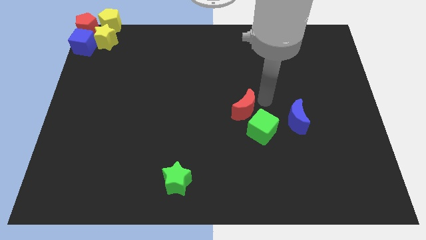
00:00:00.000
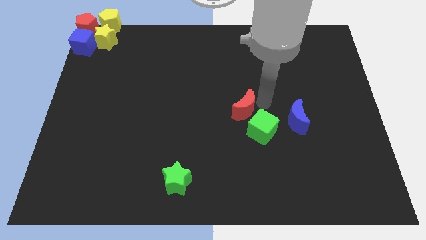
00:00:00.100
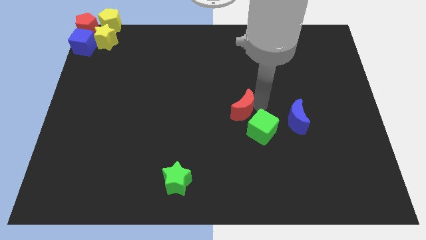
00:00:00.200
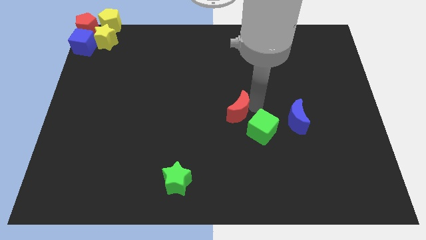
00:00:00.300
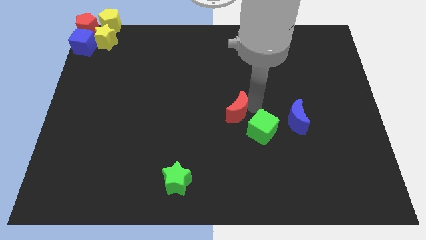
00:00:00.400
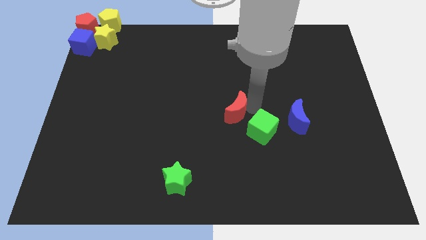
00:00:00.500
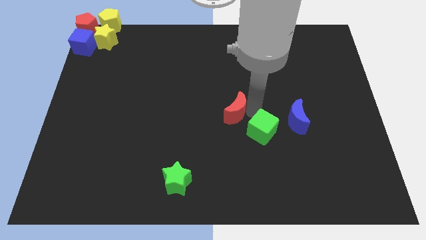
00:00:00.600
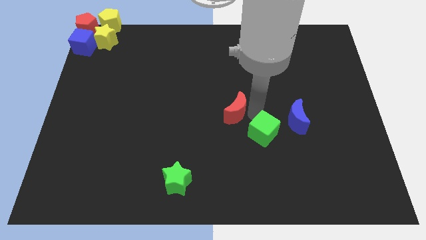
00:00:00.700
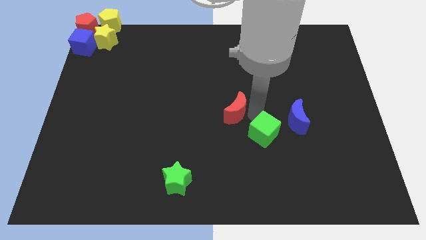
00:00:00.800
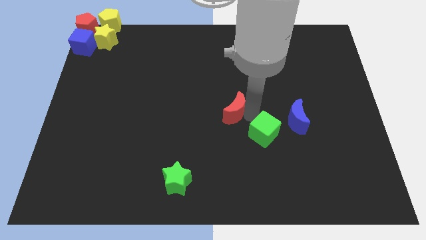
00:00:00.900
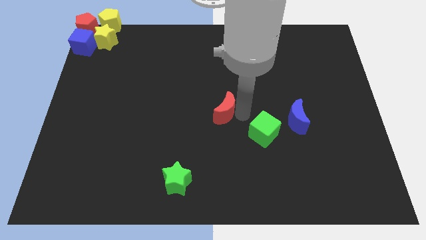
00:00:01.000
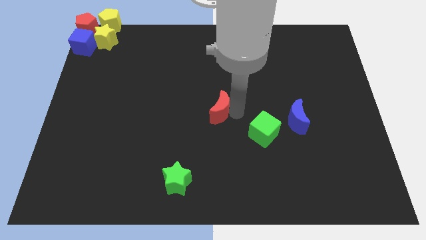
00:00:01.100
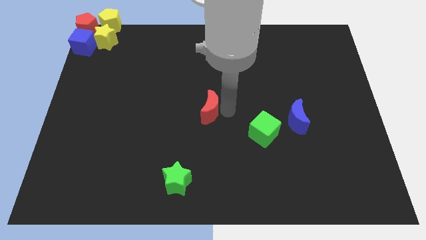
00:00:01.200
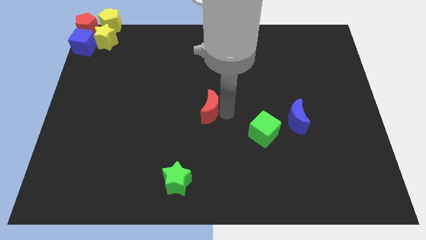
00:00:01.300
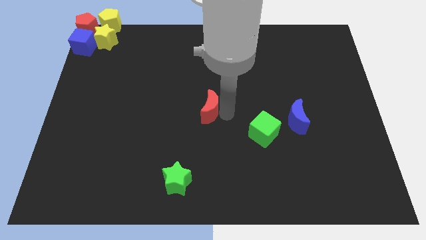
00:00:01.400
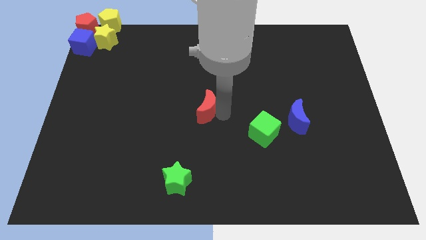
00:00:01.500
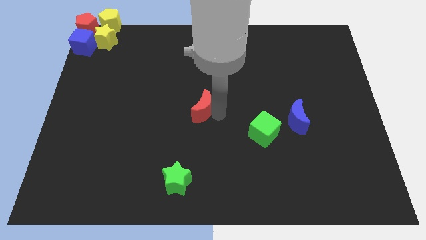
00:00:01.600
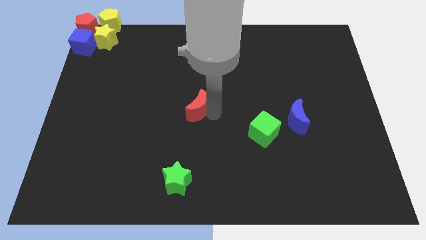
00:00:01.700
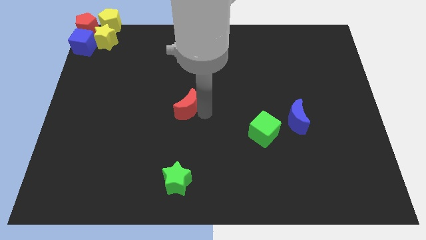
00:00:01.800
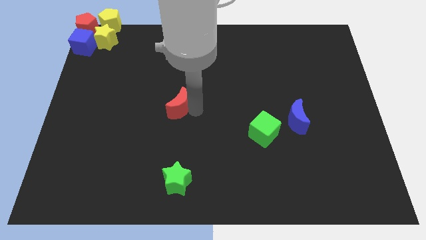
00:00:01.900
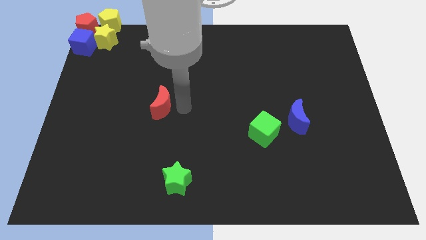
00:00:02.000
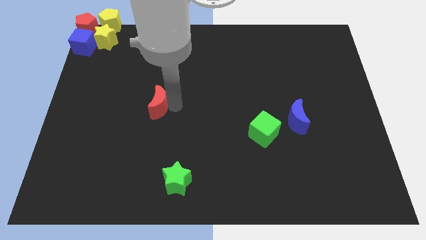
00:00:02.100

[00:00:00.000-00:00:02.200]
place the red moon above the green star

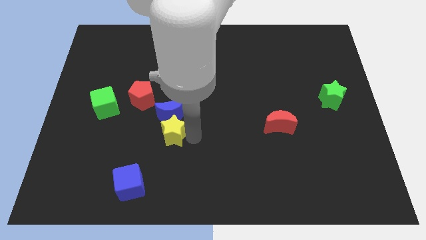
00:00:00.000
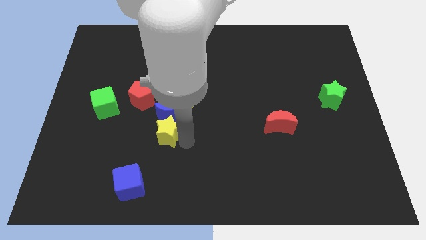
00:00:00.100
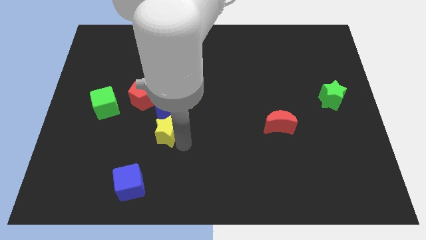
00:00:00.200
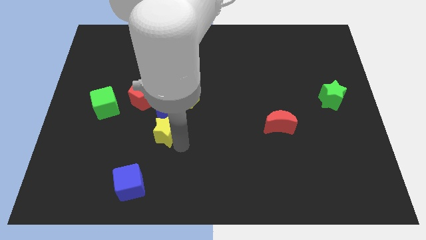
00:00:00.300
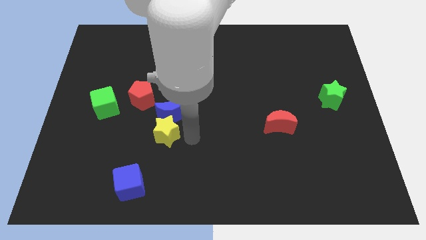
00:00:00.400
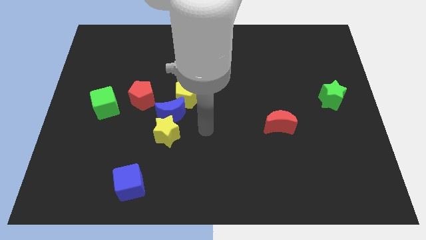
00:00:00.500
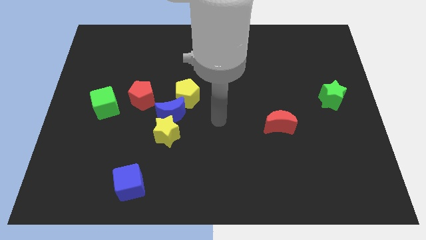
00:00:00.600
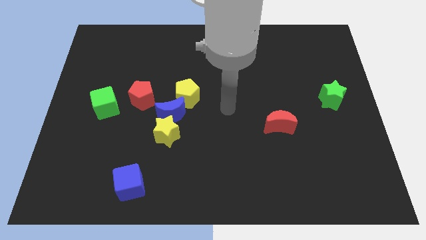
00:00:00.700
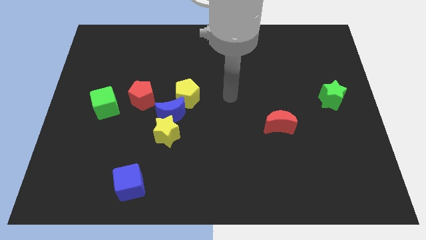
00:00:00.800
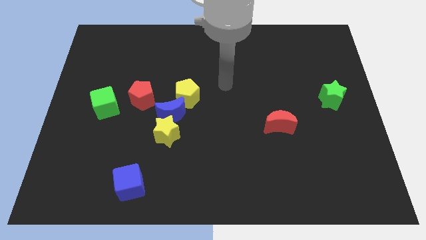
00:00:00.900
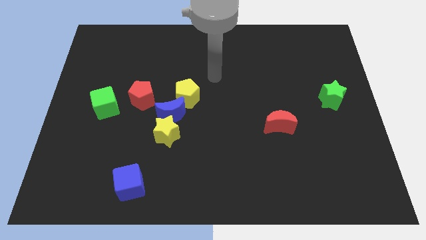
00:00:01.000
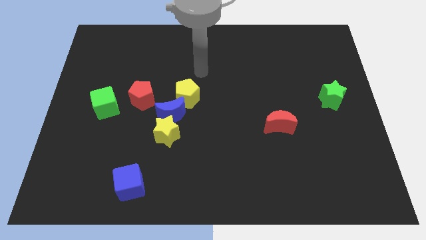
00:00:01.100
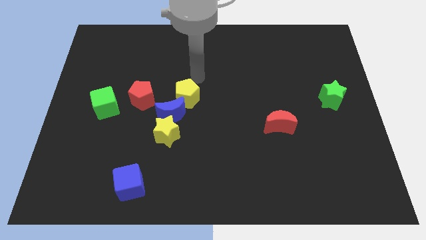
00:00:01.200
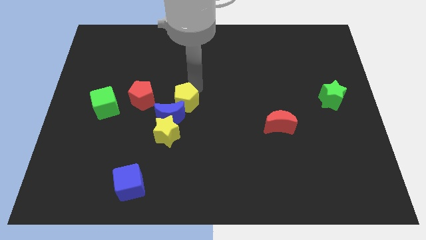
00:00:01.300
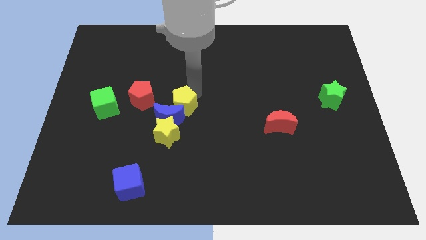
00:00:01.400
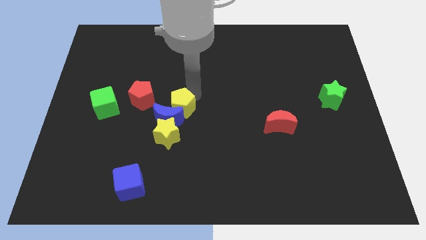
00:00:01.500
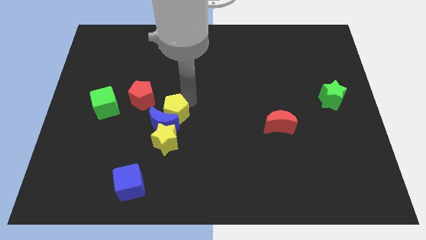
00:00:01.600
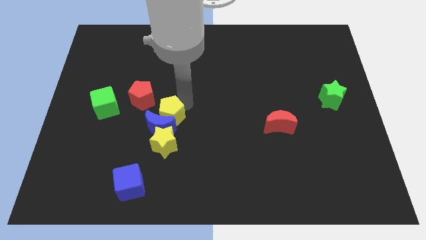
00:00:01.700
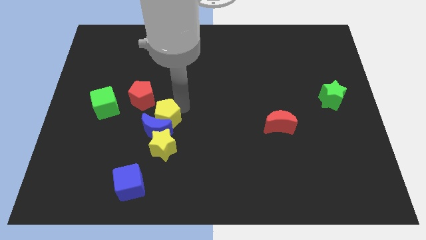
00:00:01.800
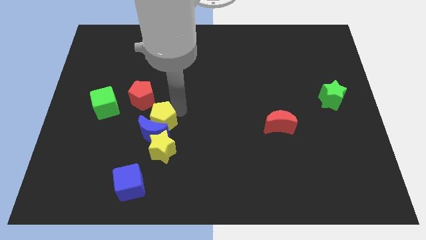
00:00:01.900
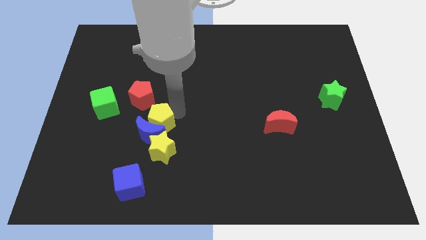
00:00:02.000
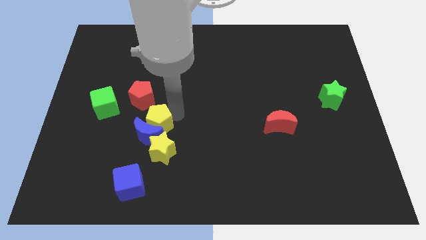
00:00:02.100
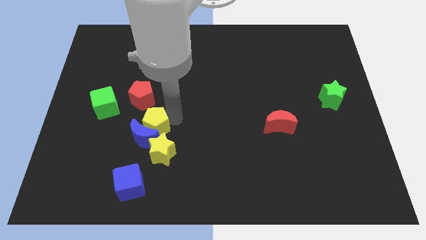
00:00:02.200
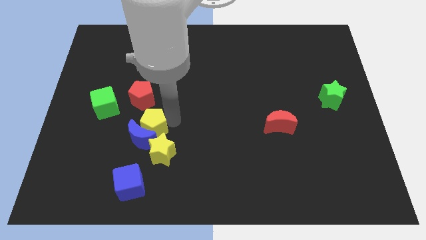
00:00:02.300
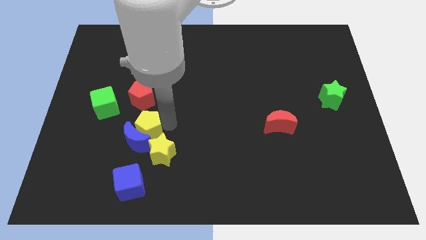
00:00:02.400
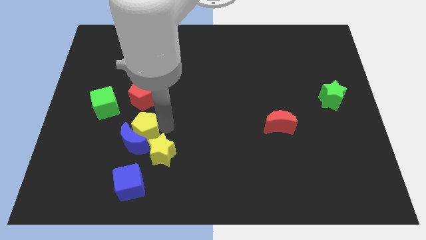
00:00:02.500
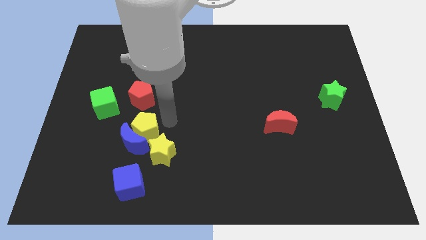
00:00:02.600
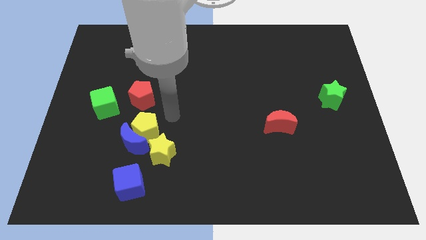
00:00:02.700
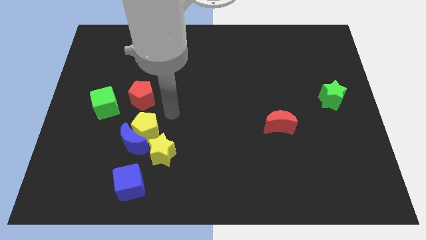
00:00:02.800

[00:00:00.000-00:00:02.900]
push the yellow pentagon and blue moon towards the left

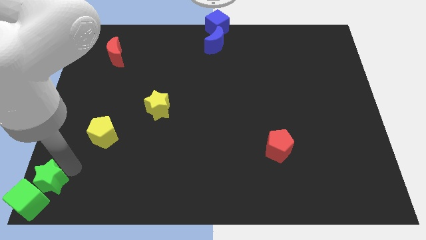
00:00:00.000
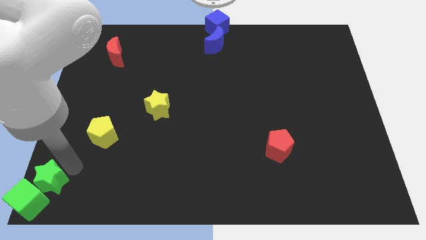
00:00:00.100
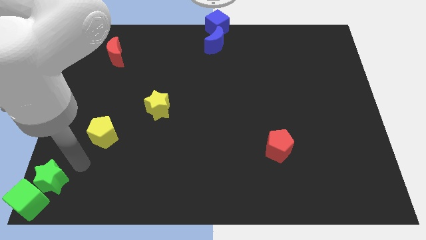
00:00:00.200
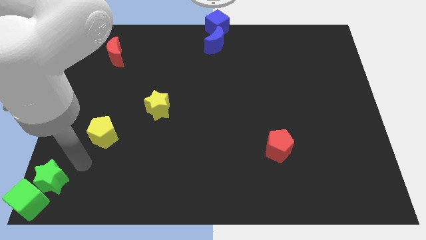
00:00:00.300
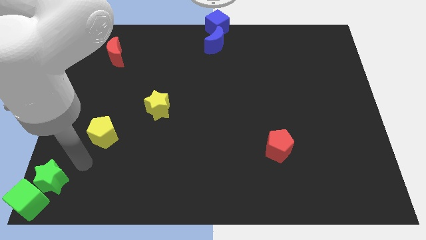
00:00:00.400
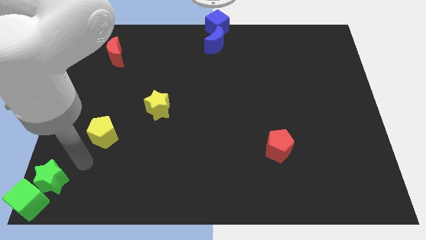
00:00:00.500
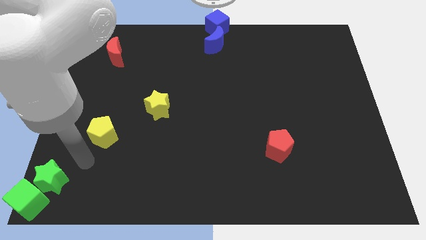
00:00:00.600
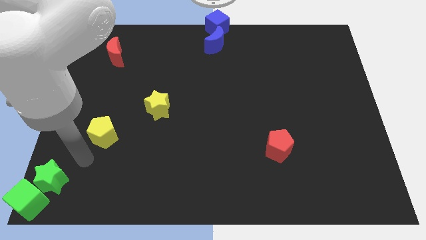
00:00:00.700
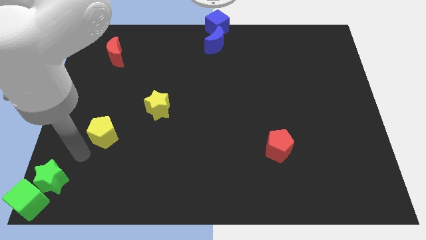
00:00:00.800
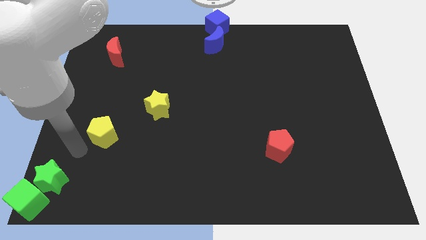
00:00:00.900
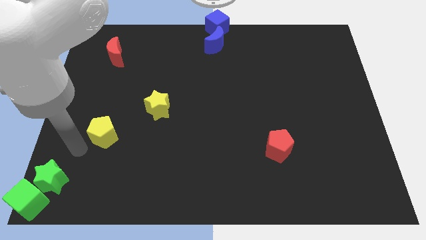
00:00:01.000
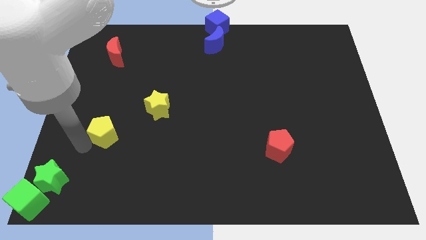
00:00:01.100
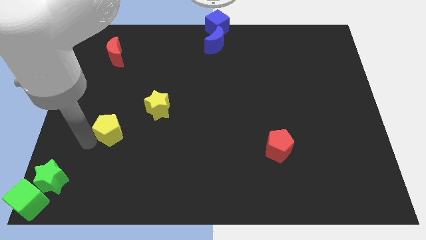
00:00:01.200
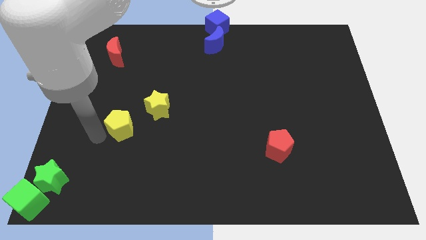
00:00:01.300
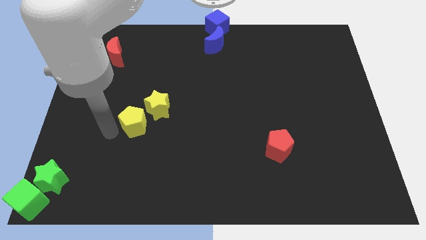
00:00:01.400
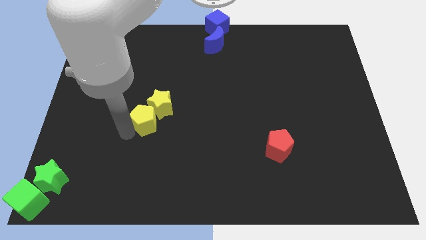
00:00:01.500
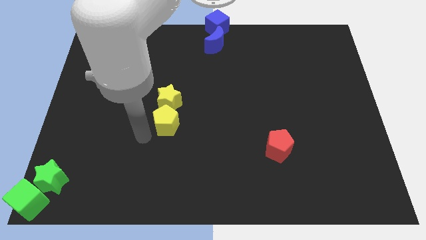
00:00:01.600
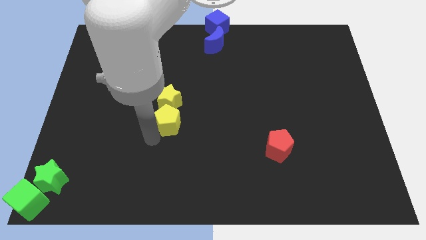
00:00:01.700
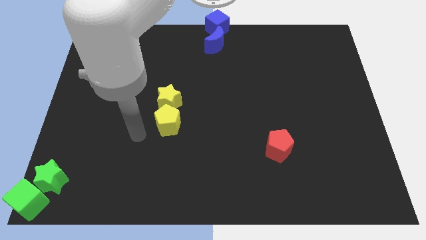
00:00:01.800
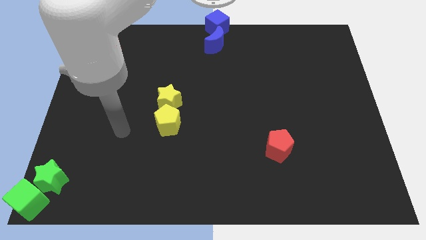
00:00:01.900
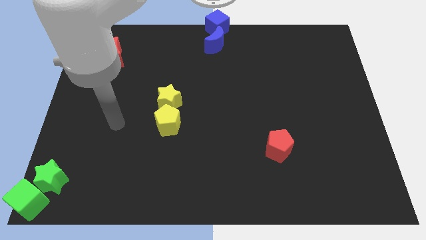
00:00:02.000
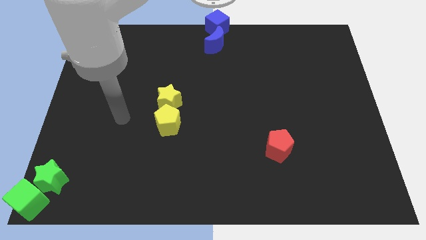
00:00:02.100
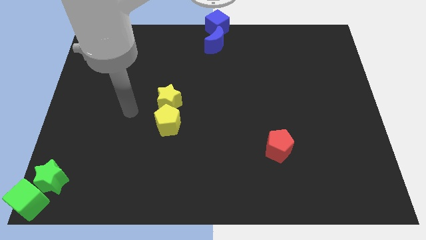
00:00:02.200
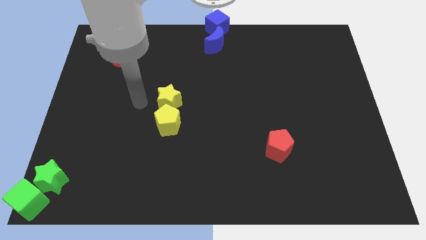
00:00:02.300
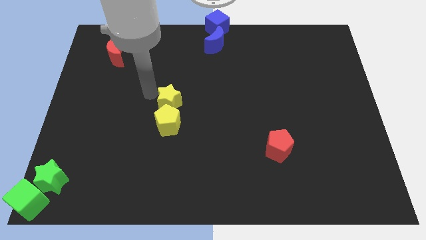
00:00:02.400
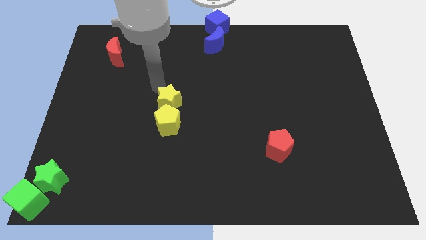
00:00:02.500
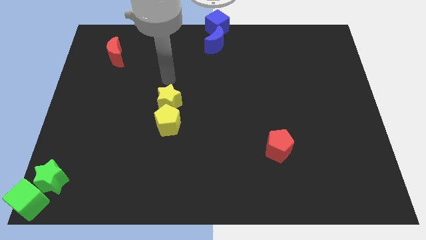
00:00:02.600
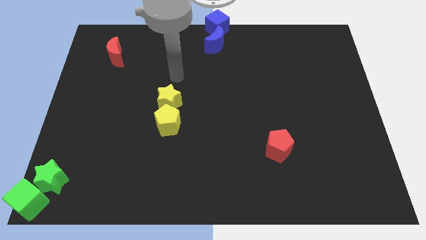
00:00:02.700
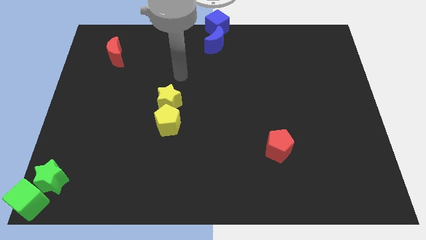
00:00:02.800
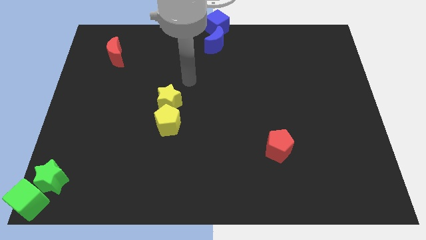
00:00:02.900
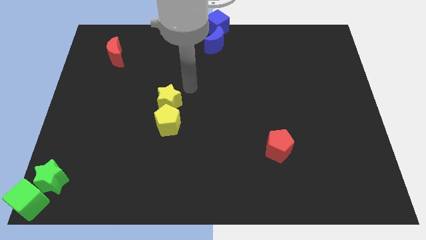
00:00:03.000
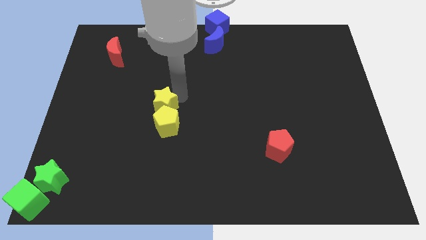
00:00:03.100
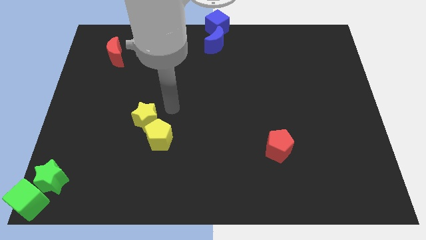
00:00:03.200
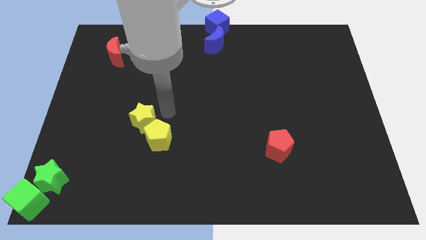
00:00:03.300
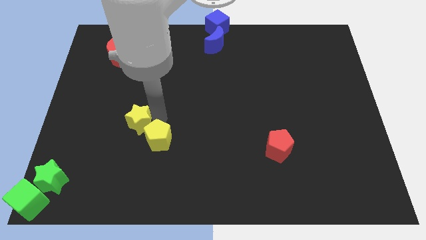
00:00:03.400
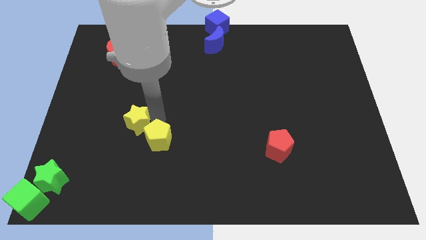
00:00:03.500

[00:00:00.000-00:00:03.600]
move the yellow pentagon into the yellow star

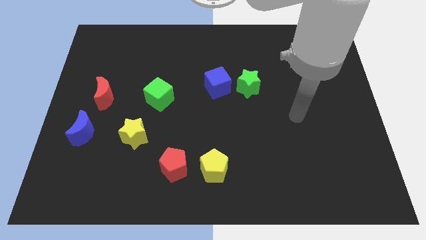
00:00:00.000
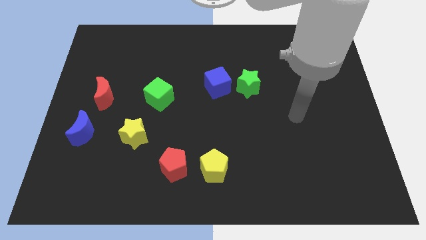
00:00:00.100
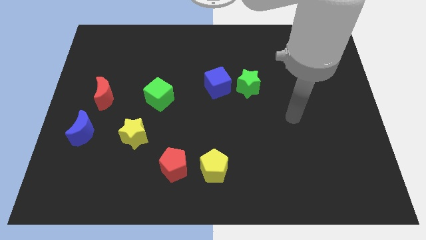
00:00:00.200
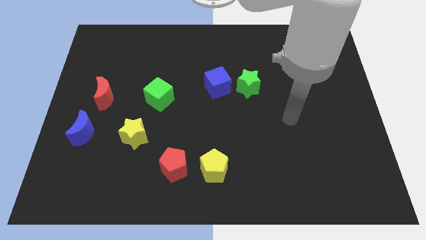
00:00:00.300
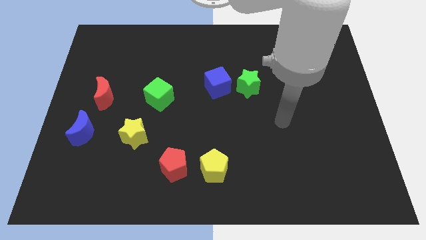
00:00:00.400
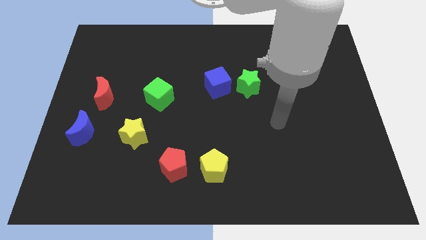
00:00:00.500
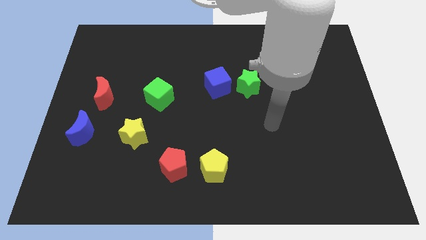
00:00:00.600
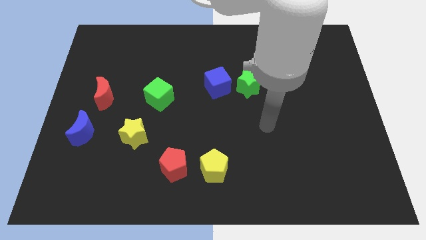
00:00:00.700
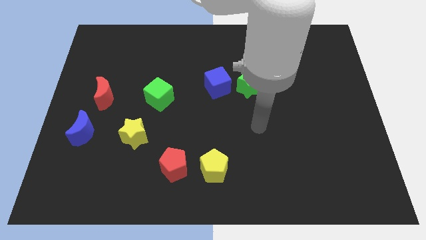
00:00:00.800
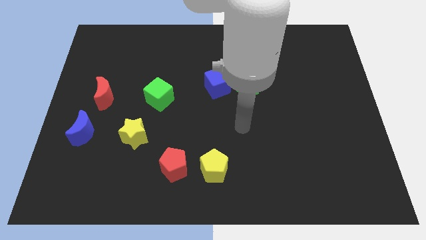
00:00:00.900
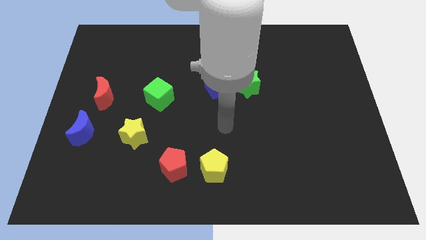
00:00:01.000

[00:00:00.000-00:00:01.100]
move your arm towards center of the board
